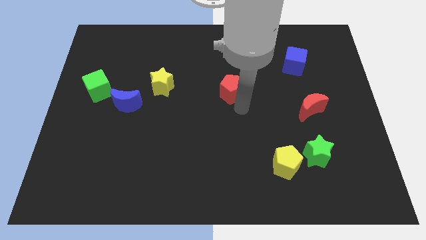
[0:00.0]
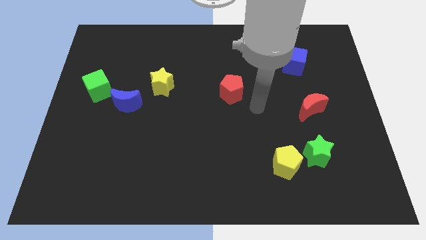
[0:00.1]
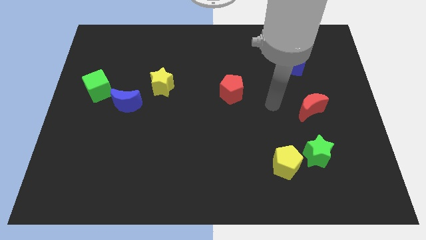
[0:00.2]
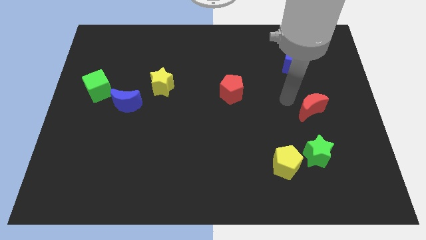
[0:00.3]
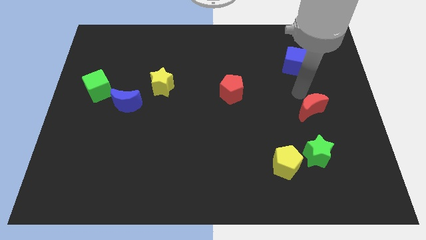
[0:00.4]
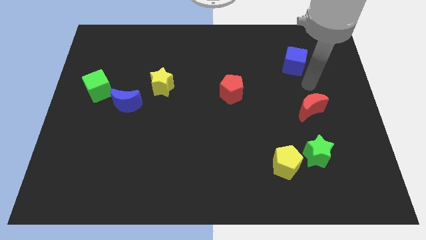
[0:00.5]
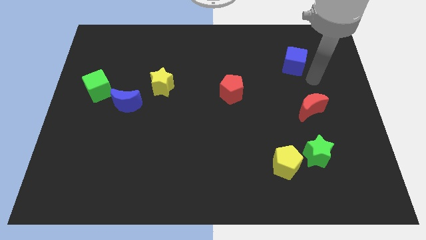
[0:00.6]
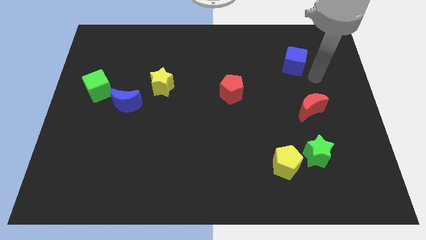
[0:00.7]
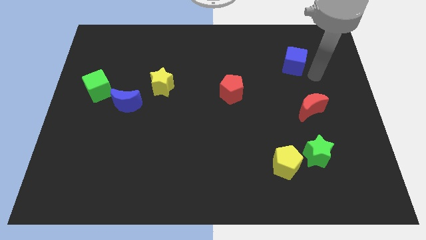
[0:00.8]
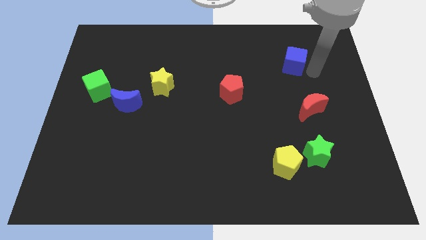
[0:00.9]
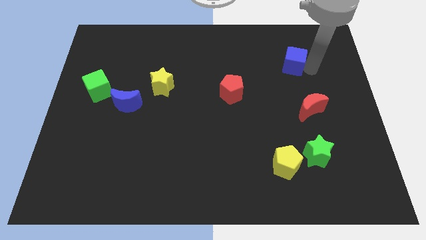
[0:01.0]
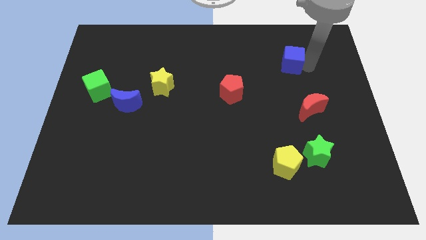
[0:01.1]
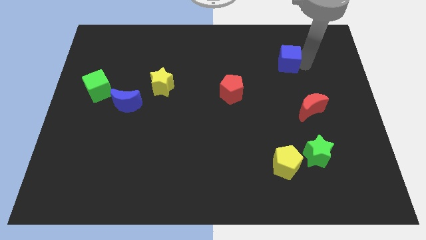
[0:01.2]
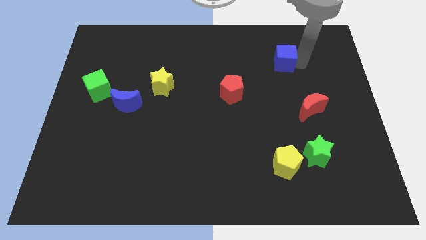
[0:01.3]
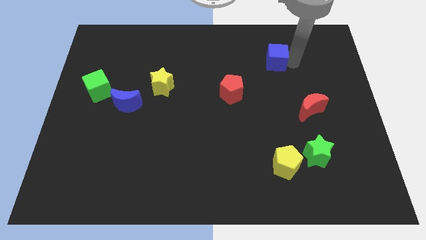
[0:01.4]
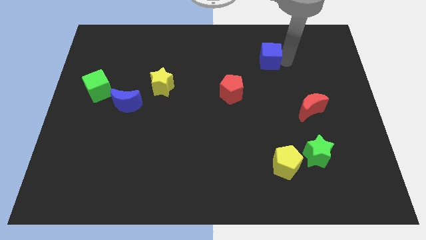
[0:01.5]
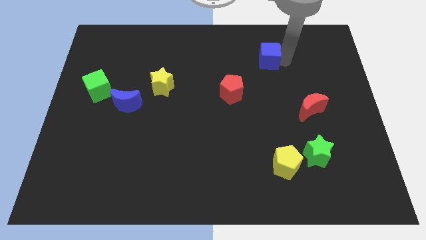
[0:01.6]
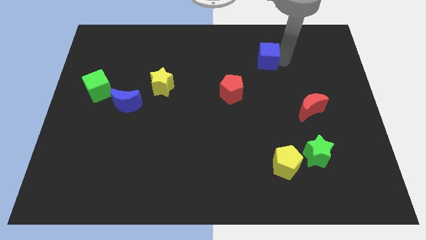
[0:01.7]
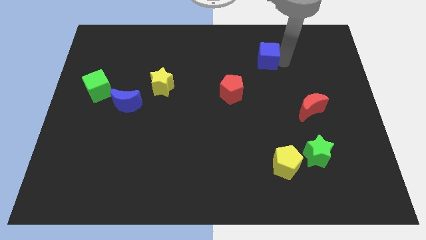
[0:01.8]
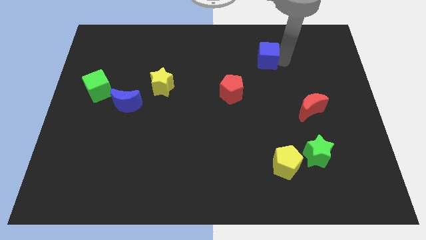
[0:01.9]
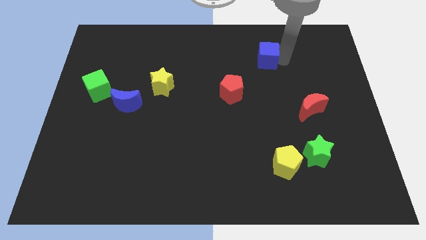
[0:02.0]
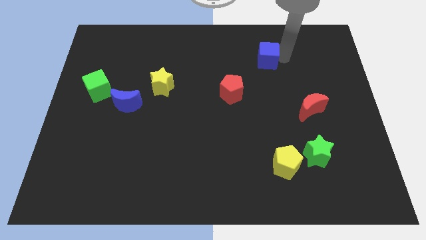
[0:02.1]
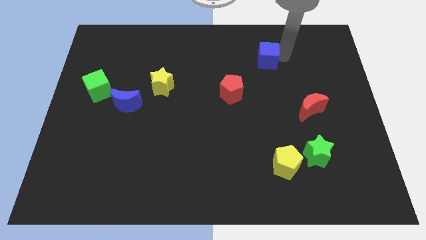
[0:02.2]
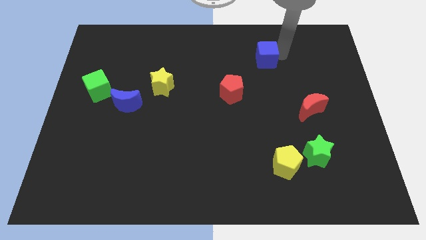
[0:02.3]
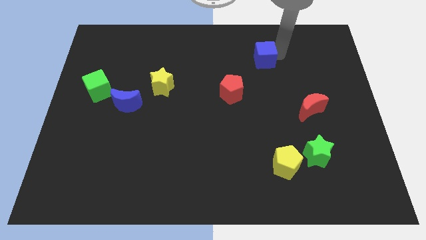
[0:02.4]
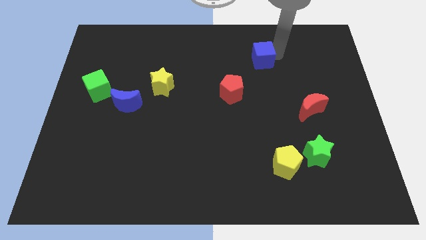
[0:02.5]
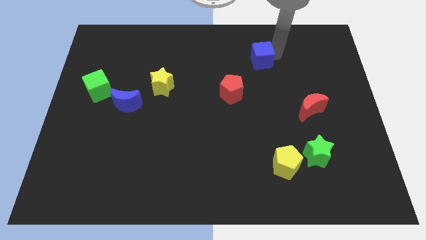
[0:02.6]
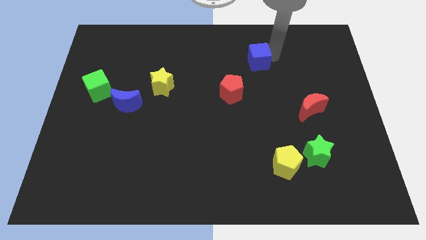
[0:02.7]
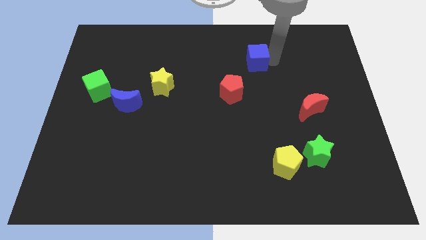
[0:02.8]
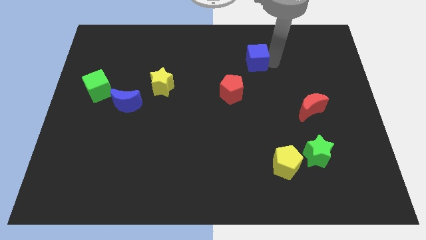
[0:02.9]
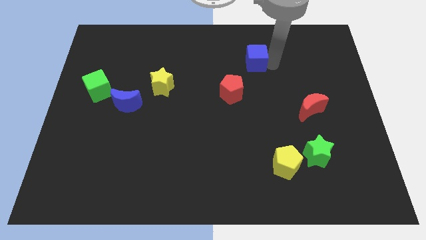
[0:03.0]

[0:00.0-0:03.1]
slide blue cube to the top right of red pentagon

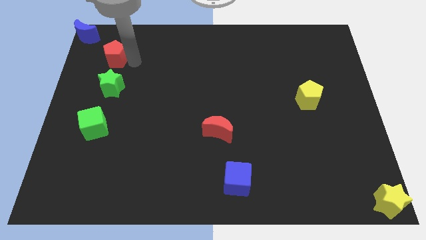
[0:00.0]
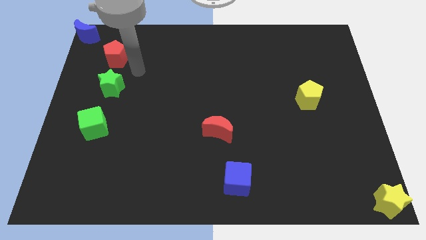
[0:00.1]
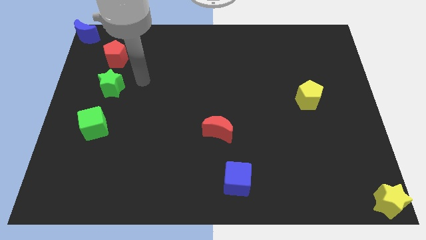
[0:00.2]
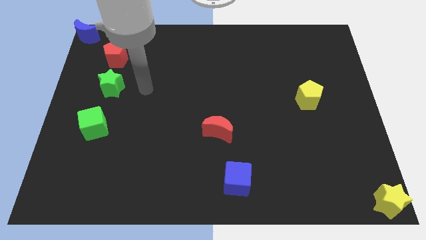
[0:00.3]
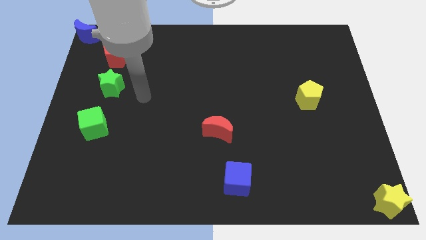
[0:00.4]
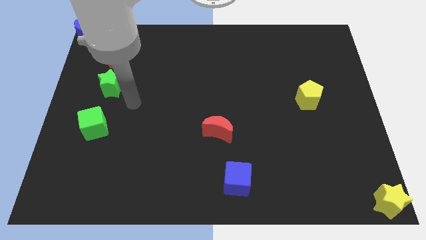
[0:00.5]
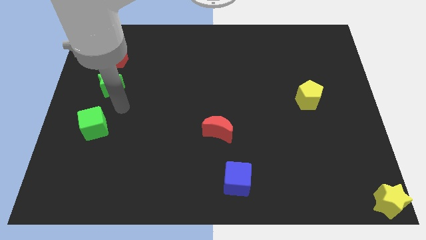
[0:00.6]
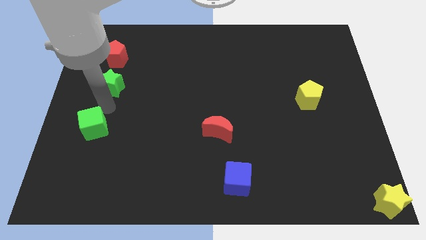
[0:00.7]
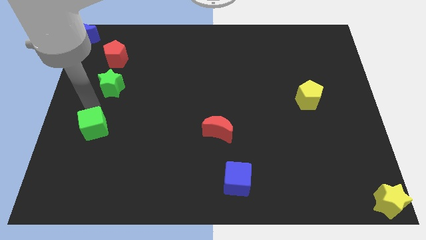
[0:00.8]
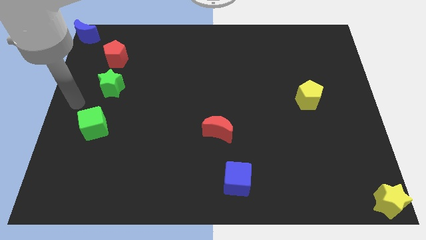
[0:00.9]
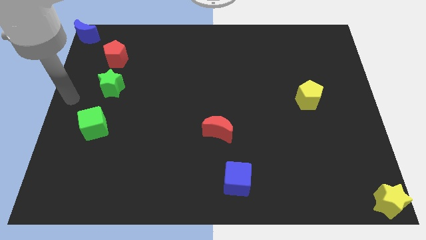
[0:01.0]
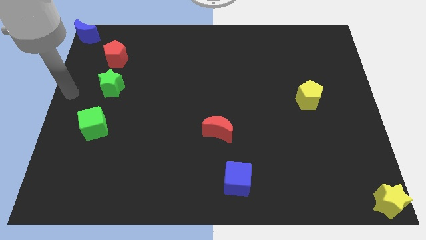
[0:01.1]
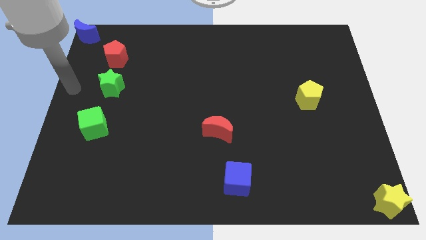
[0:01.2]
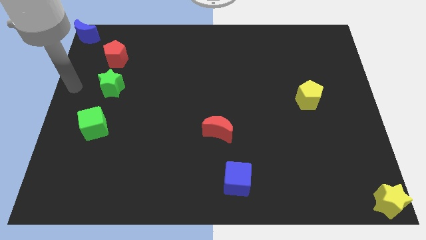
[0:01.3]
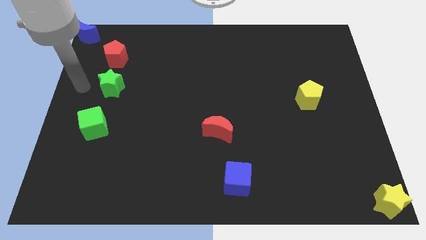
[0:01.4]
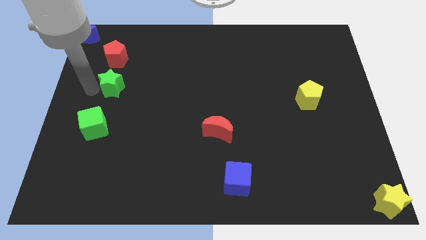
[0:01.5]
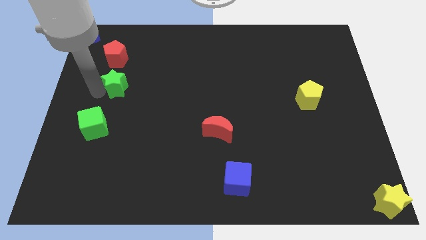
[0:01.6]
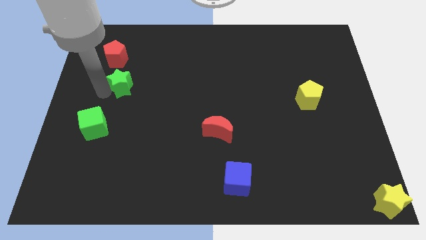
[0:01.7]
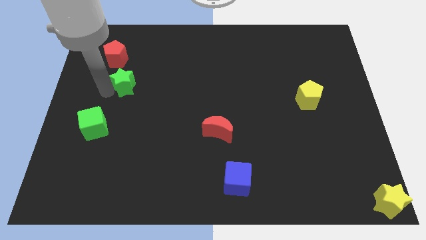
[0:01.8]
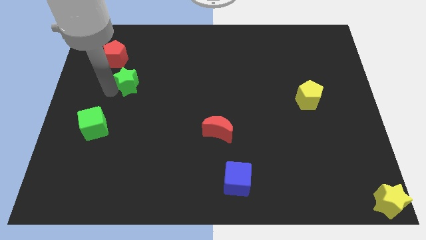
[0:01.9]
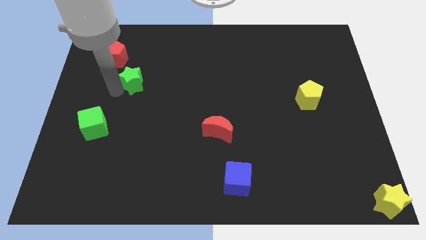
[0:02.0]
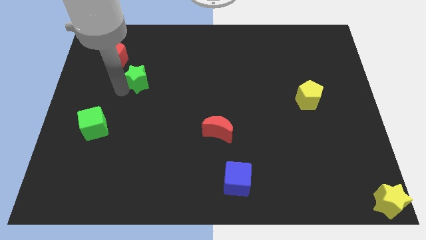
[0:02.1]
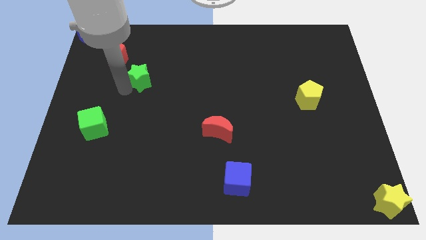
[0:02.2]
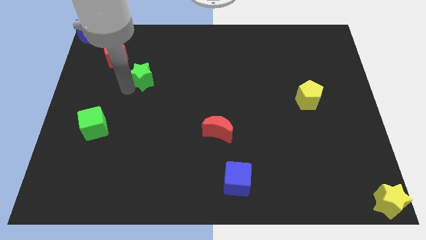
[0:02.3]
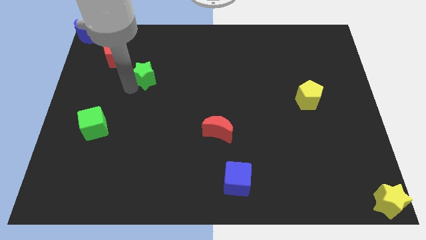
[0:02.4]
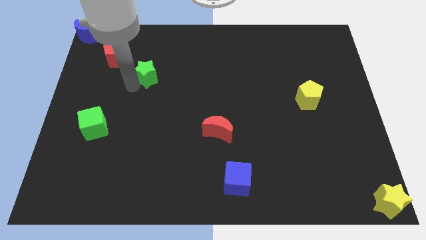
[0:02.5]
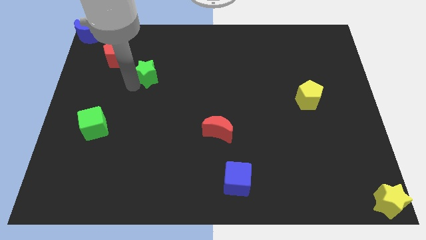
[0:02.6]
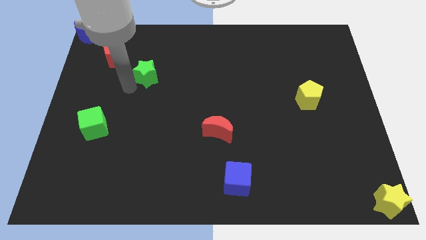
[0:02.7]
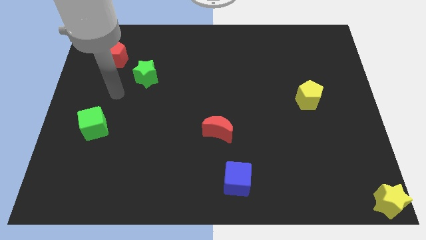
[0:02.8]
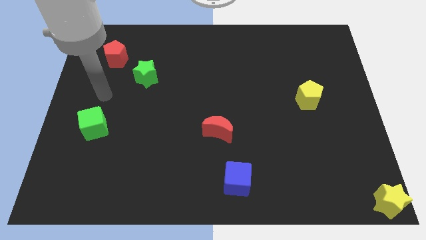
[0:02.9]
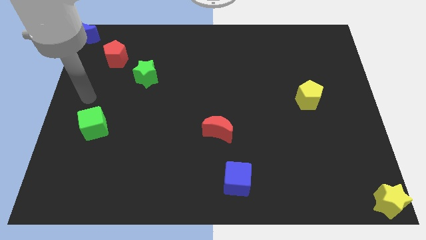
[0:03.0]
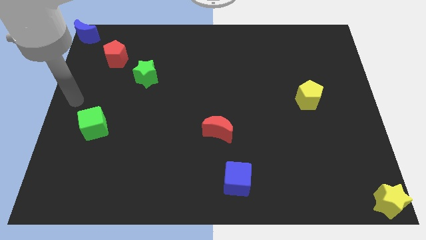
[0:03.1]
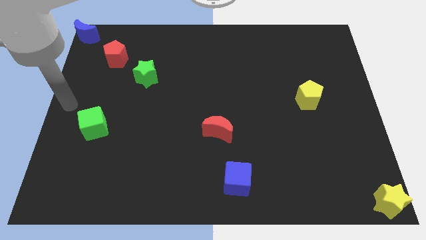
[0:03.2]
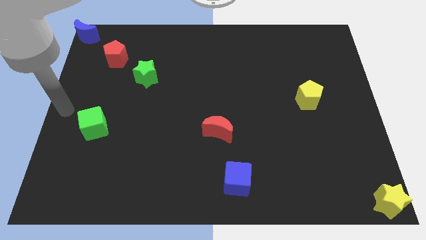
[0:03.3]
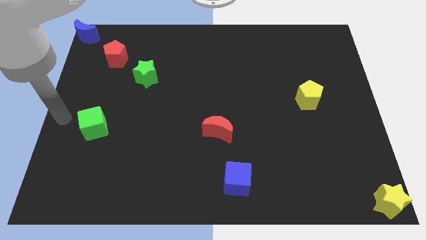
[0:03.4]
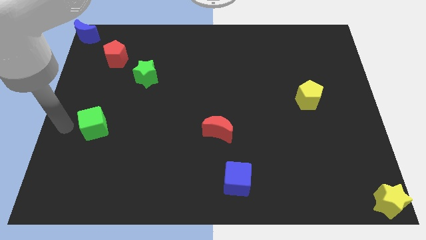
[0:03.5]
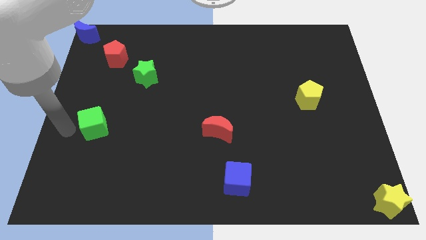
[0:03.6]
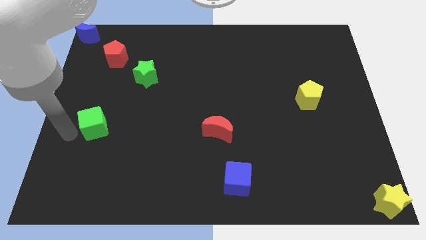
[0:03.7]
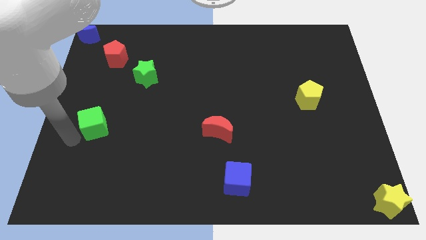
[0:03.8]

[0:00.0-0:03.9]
place the green star in between the red moon and red pentagon

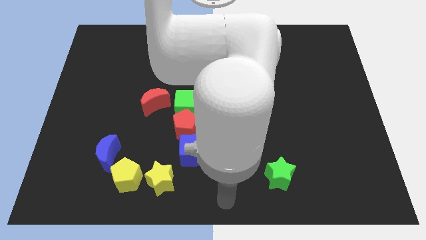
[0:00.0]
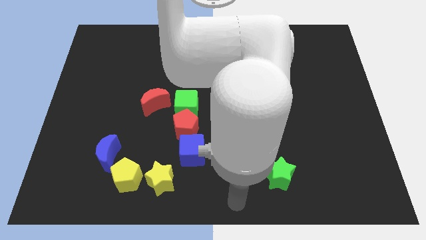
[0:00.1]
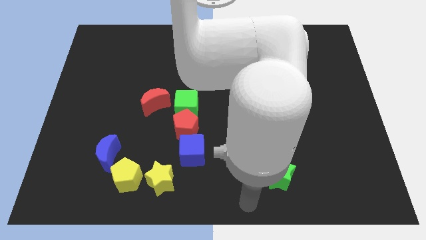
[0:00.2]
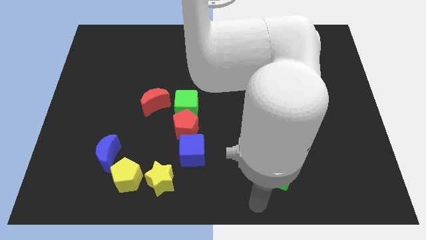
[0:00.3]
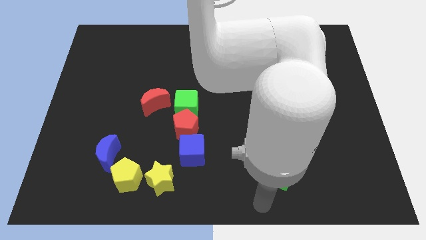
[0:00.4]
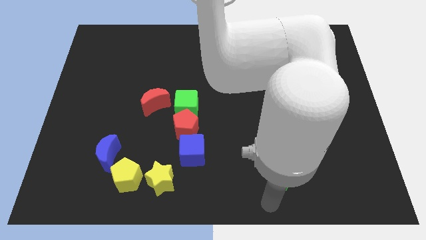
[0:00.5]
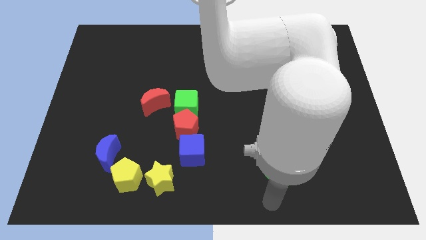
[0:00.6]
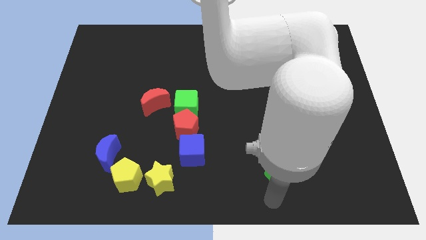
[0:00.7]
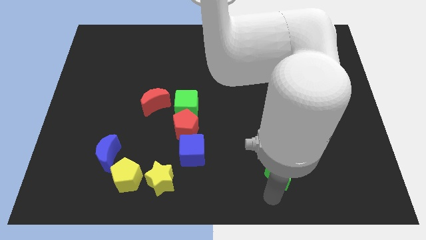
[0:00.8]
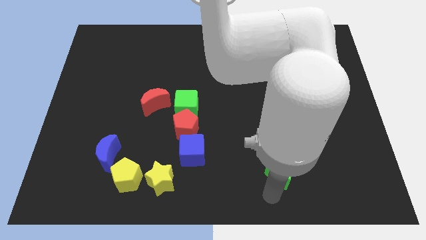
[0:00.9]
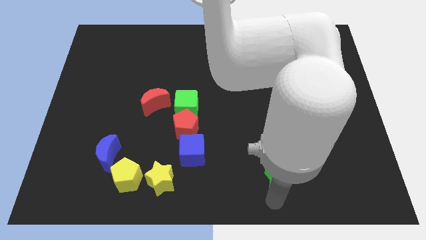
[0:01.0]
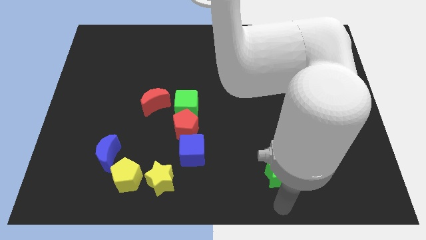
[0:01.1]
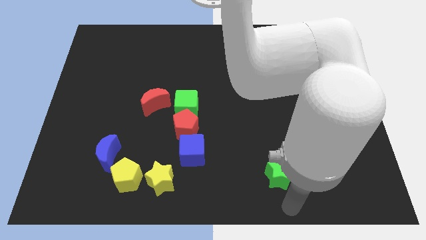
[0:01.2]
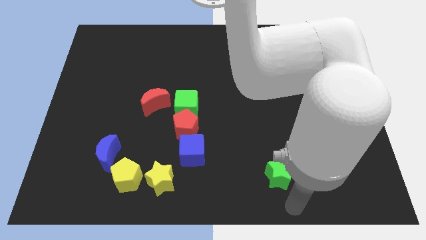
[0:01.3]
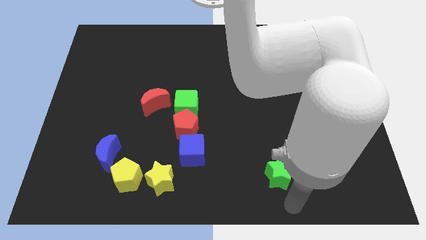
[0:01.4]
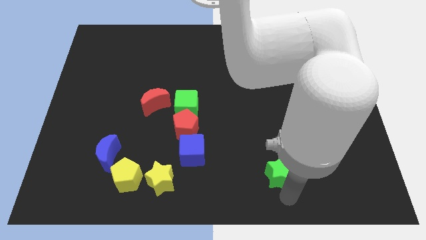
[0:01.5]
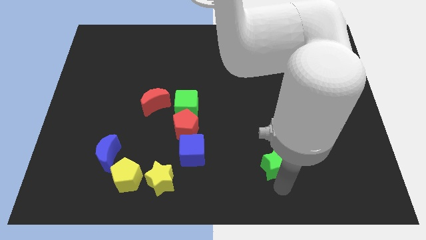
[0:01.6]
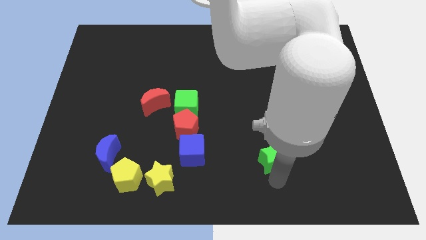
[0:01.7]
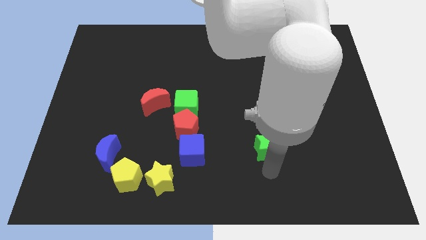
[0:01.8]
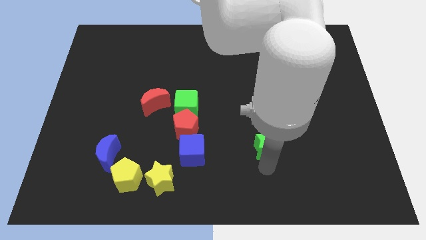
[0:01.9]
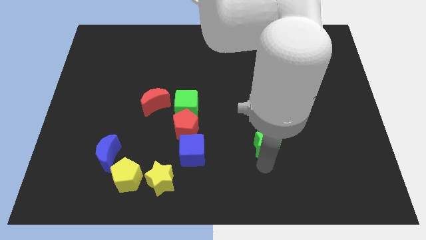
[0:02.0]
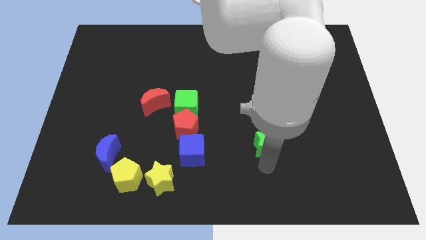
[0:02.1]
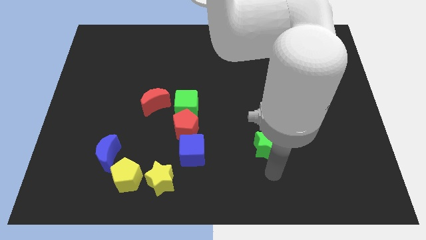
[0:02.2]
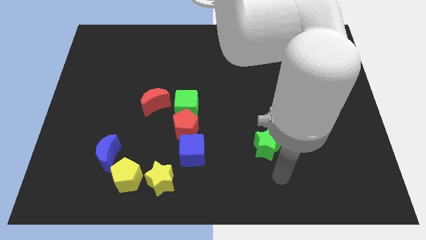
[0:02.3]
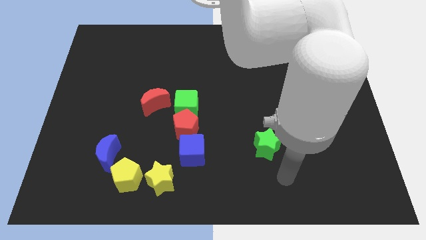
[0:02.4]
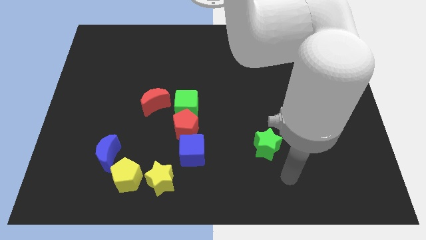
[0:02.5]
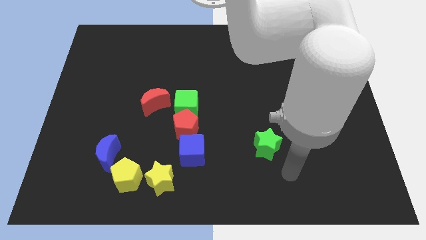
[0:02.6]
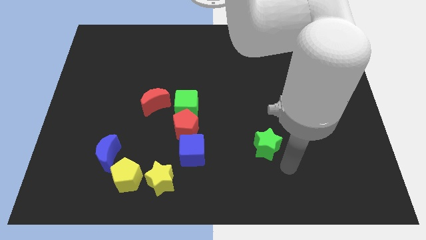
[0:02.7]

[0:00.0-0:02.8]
place green star to the right side of the blue cube
